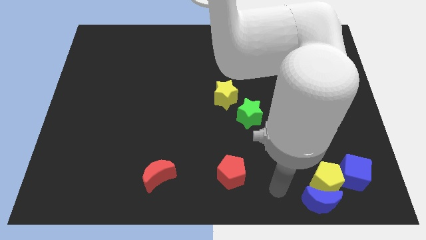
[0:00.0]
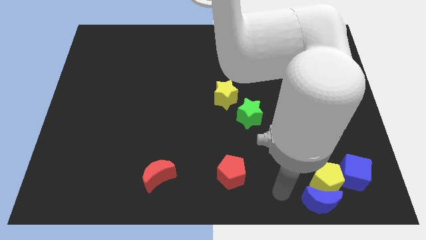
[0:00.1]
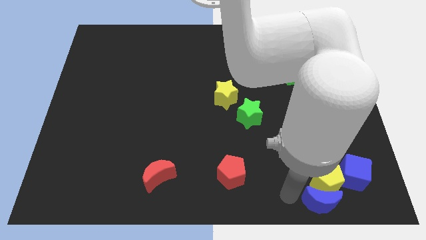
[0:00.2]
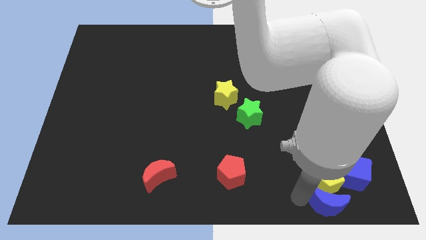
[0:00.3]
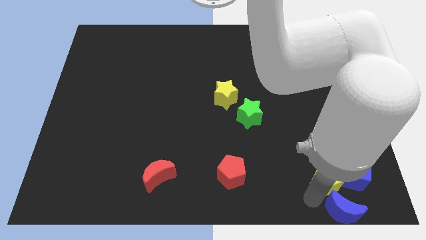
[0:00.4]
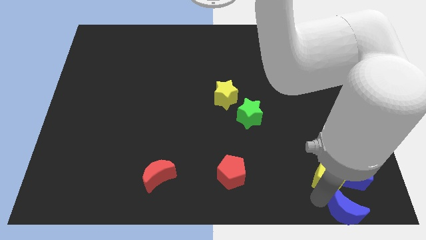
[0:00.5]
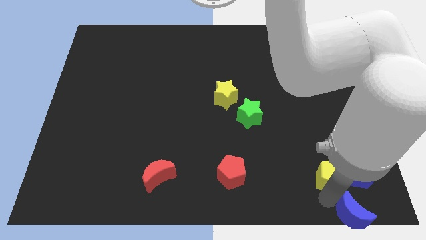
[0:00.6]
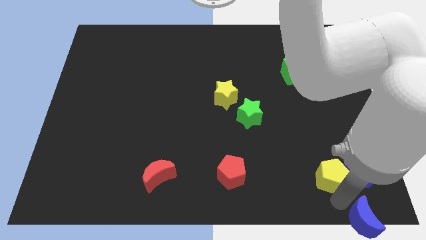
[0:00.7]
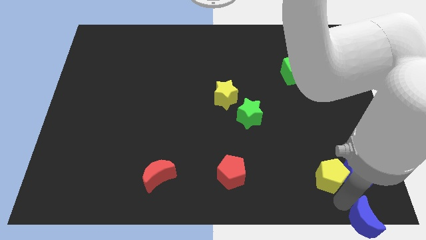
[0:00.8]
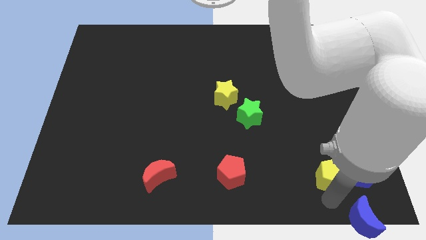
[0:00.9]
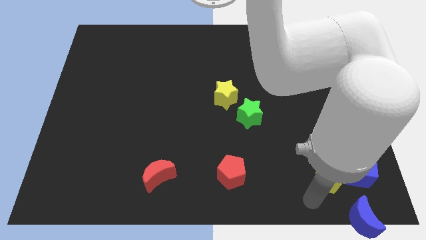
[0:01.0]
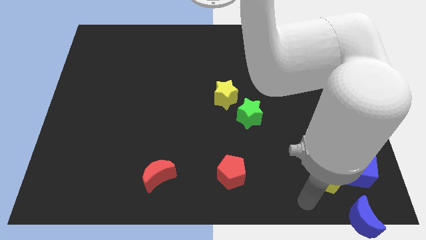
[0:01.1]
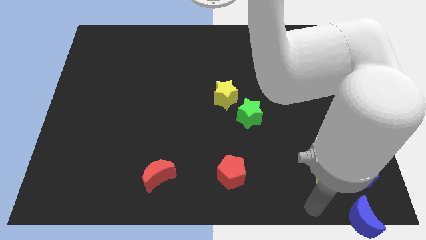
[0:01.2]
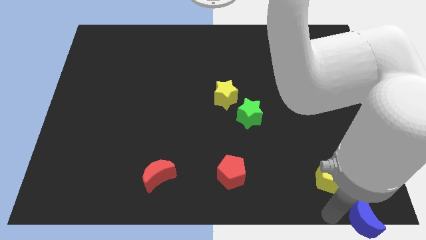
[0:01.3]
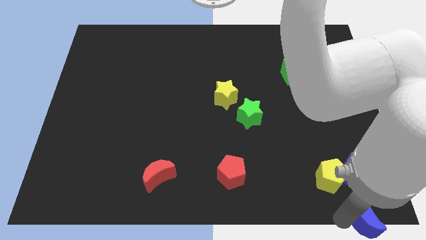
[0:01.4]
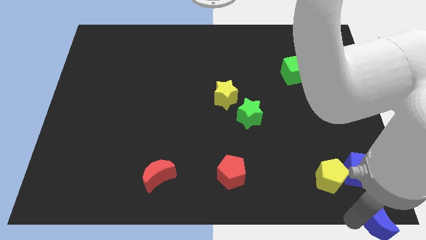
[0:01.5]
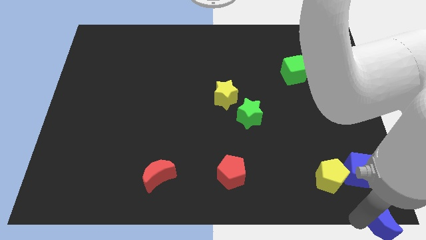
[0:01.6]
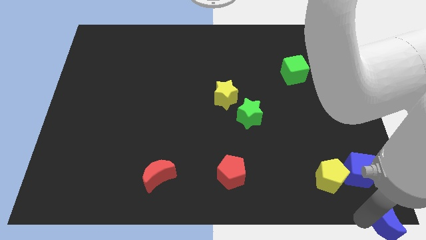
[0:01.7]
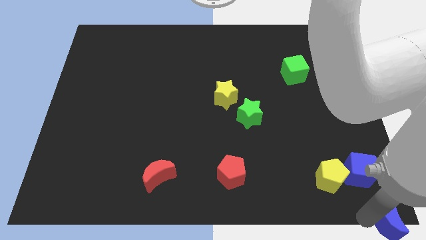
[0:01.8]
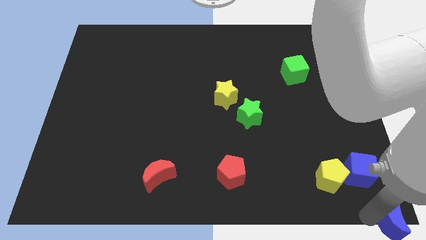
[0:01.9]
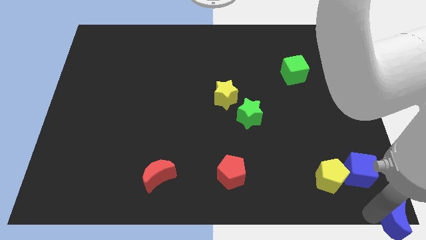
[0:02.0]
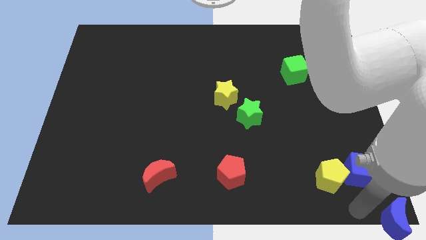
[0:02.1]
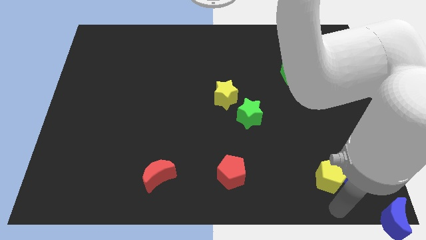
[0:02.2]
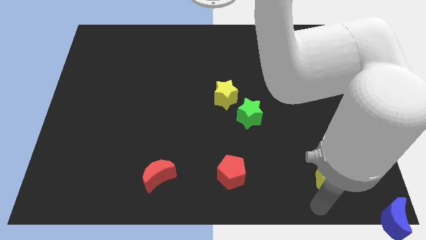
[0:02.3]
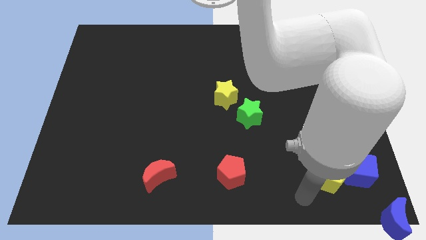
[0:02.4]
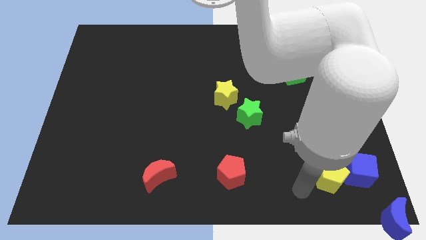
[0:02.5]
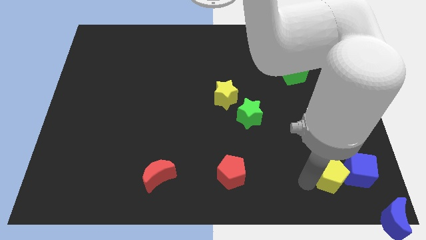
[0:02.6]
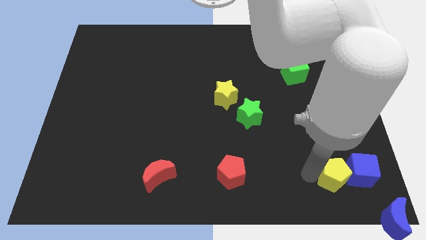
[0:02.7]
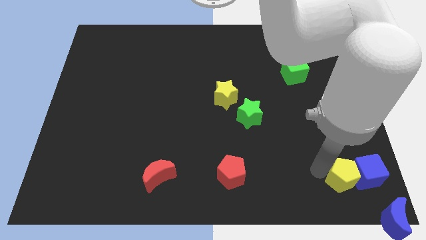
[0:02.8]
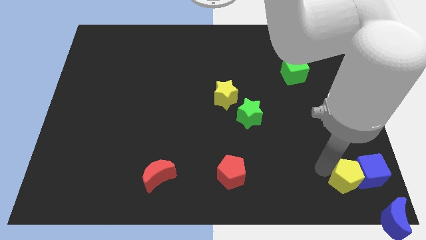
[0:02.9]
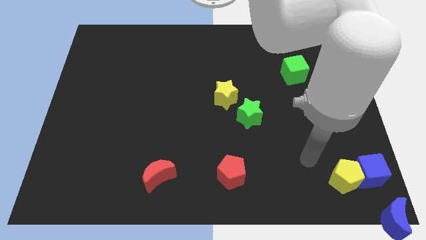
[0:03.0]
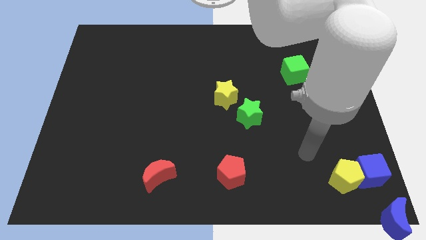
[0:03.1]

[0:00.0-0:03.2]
slide the blue moon to the bottom right of the board

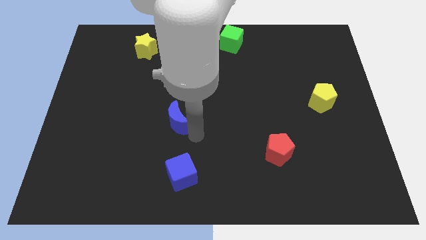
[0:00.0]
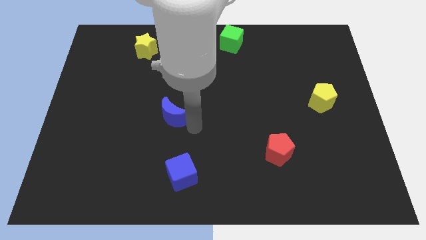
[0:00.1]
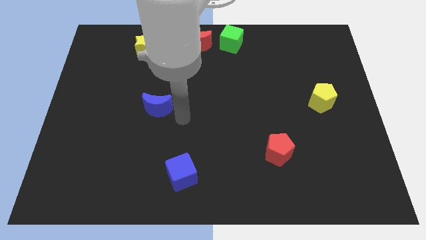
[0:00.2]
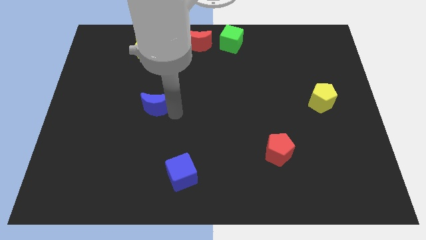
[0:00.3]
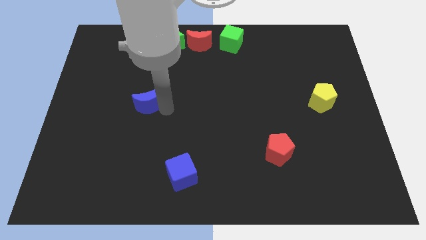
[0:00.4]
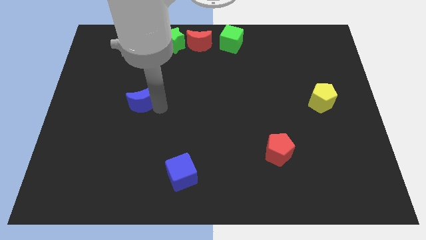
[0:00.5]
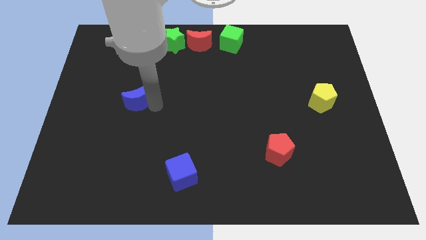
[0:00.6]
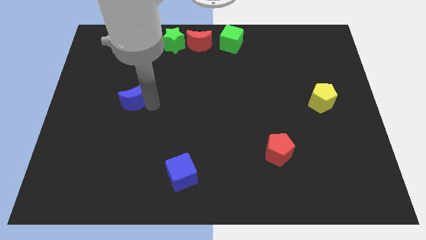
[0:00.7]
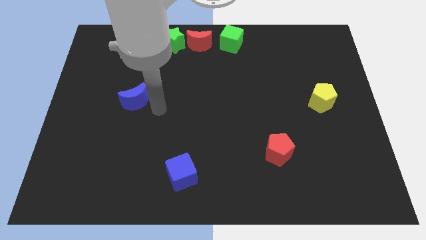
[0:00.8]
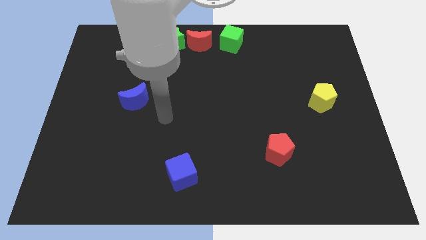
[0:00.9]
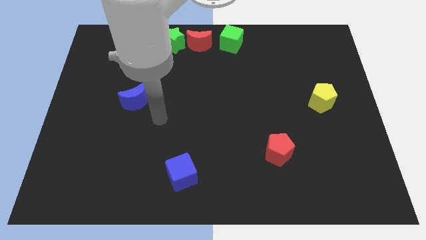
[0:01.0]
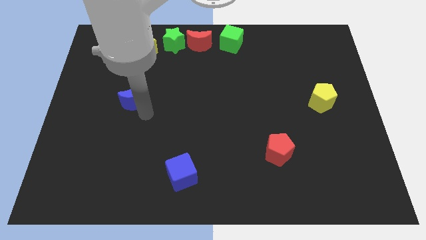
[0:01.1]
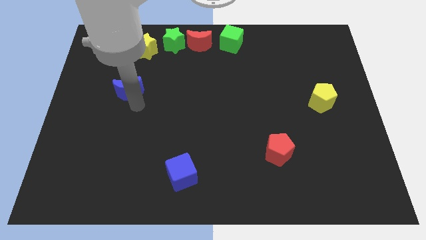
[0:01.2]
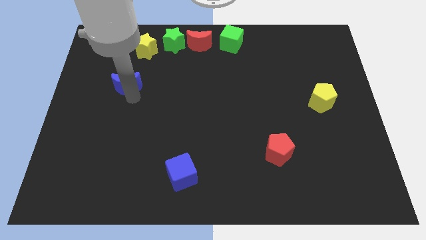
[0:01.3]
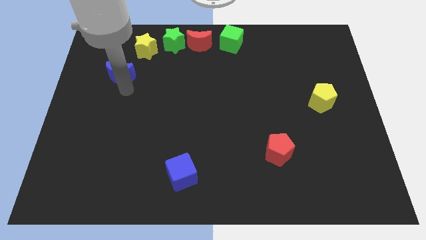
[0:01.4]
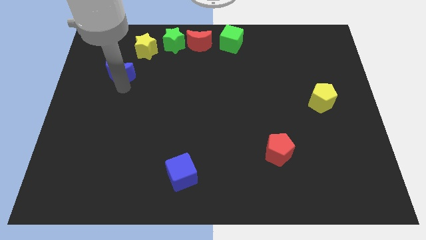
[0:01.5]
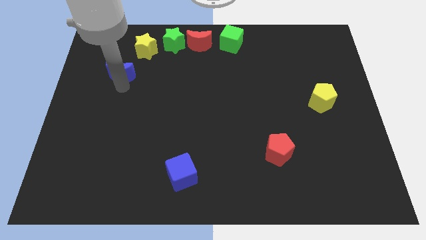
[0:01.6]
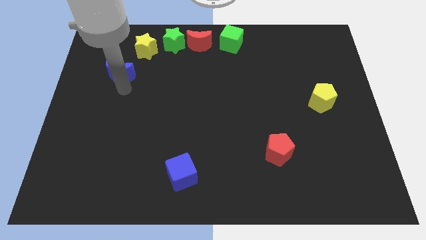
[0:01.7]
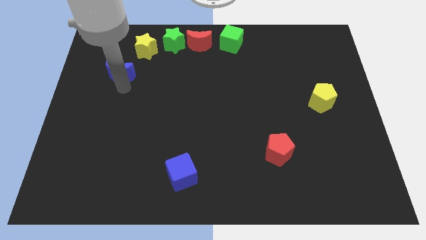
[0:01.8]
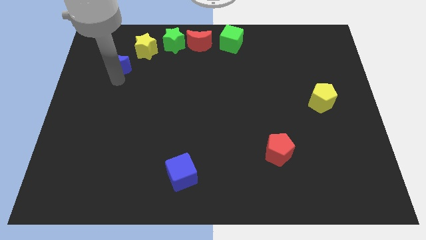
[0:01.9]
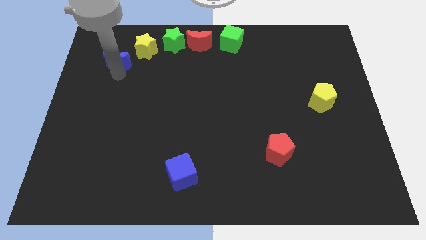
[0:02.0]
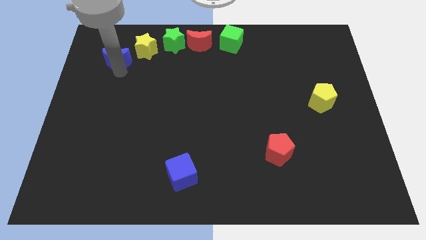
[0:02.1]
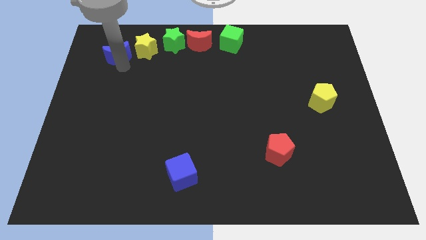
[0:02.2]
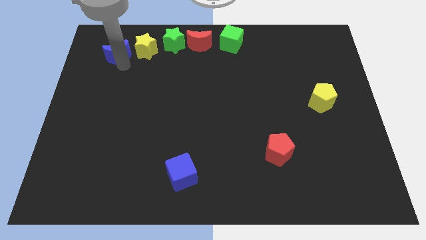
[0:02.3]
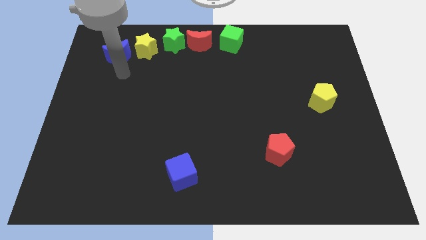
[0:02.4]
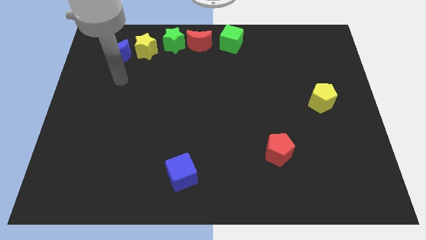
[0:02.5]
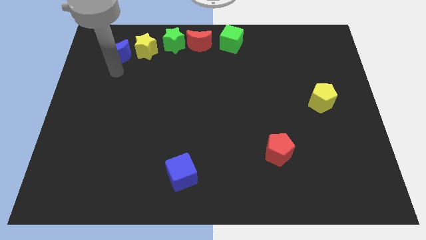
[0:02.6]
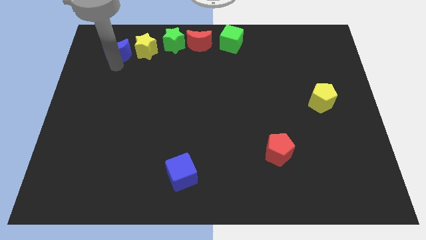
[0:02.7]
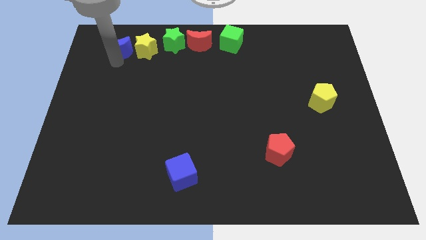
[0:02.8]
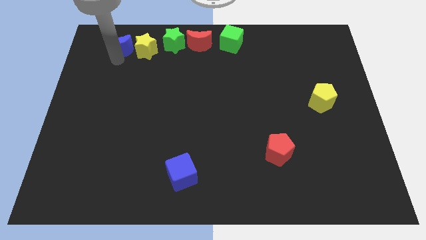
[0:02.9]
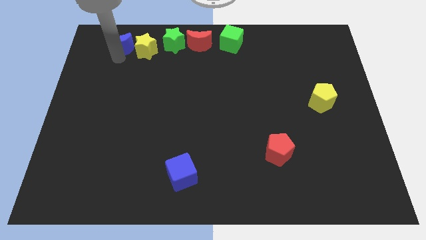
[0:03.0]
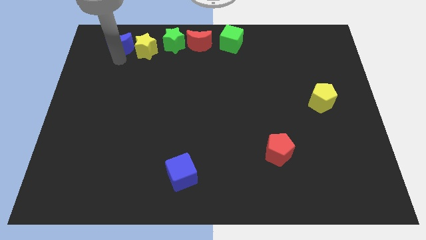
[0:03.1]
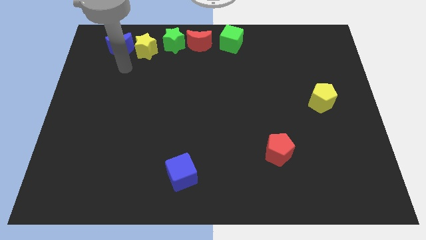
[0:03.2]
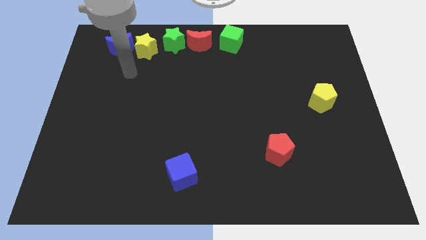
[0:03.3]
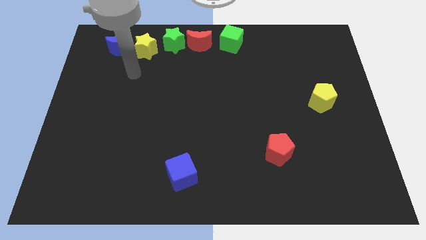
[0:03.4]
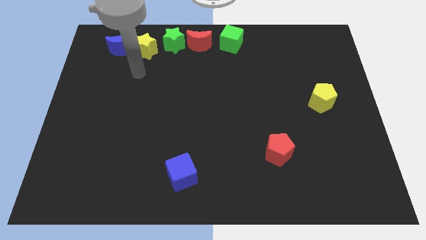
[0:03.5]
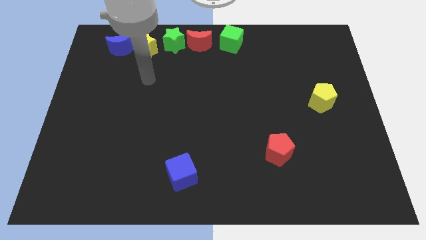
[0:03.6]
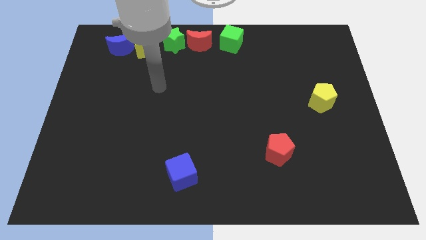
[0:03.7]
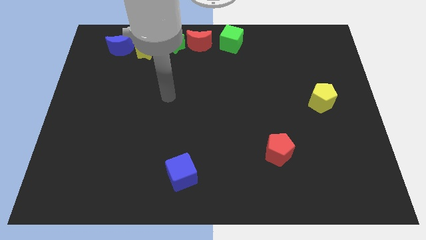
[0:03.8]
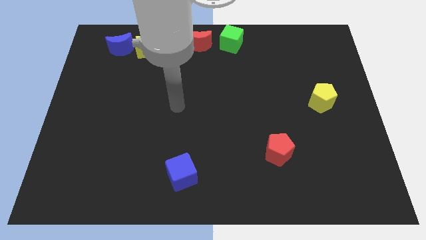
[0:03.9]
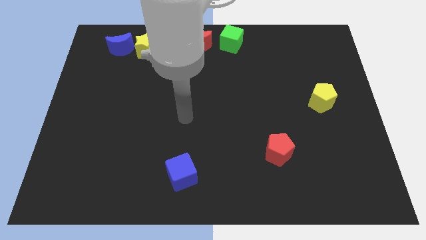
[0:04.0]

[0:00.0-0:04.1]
place the blue moon to the left of the yellow star

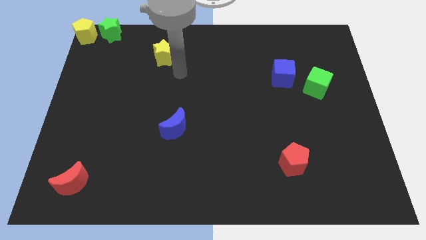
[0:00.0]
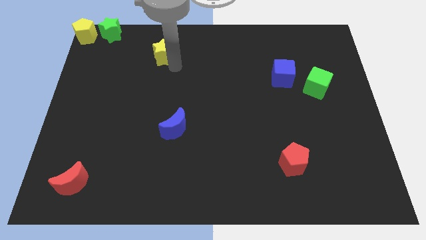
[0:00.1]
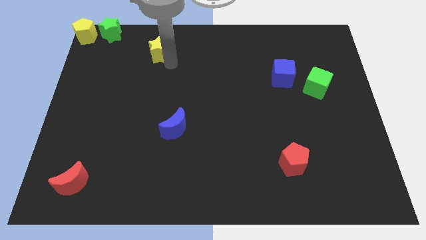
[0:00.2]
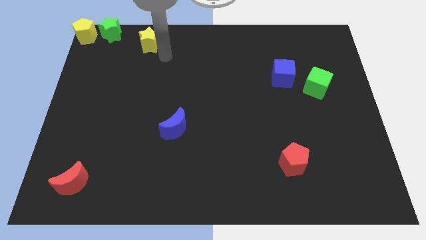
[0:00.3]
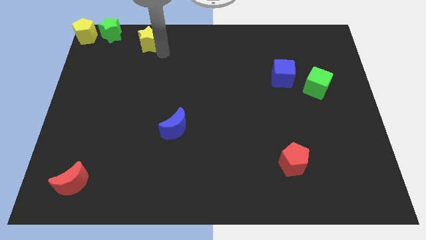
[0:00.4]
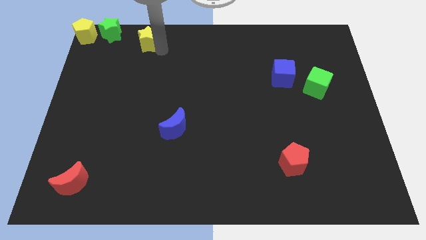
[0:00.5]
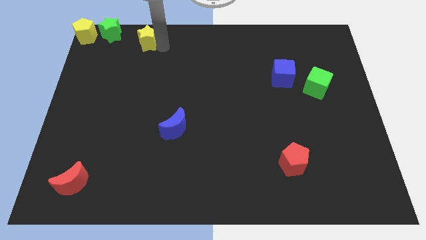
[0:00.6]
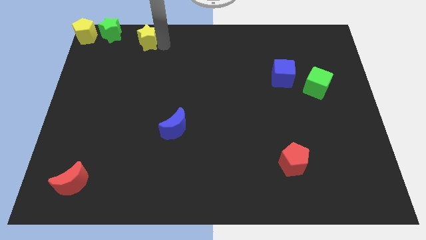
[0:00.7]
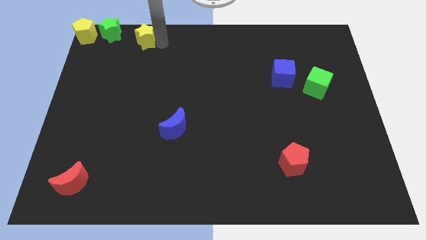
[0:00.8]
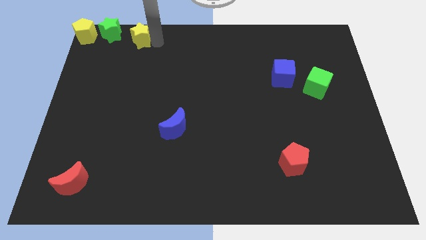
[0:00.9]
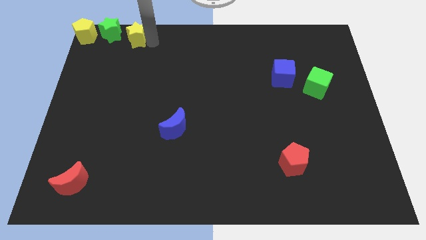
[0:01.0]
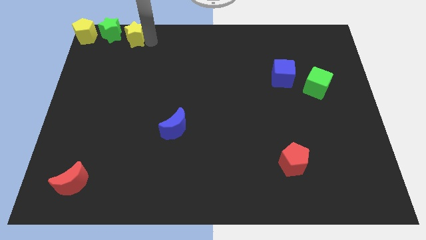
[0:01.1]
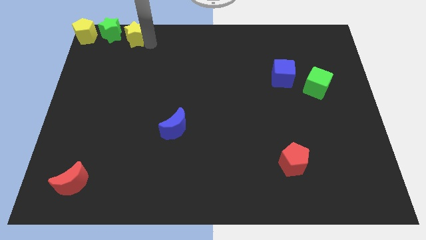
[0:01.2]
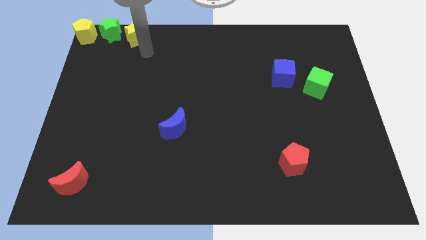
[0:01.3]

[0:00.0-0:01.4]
push the yellow star to the right of the green star
